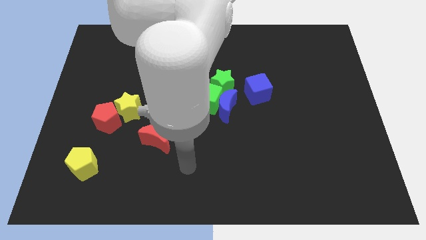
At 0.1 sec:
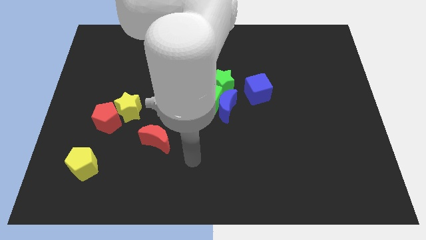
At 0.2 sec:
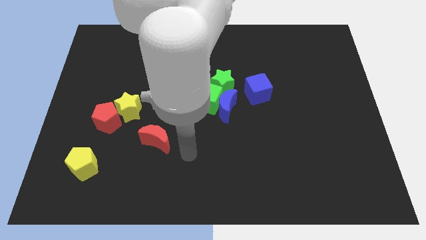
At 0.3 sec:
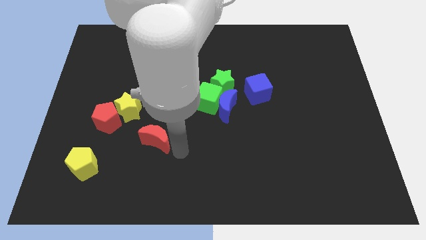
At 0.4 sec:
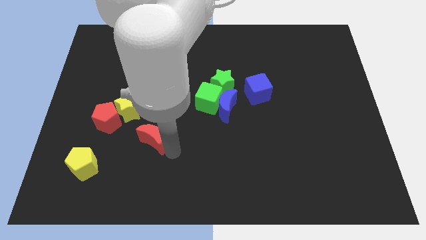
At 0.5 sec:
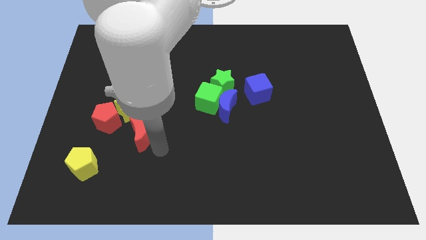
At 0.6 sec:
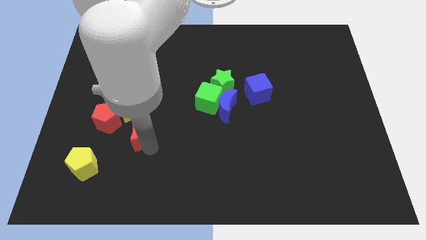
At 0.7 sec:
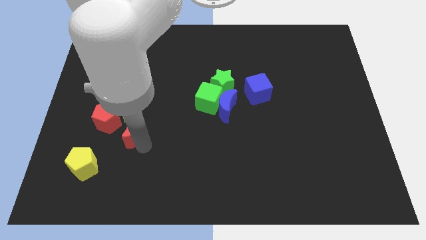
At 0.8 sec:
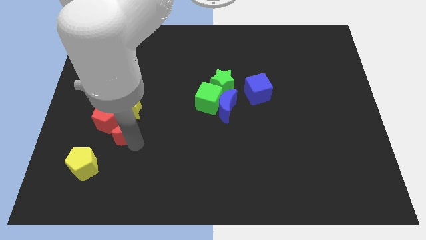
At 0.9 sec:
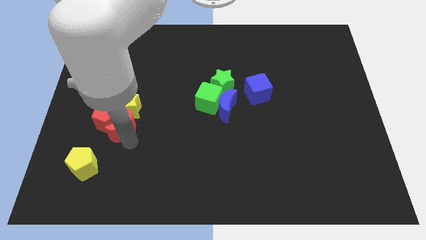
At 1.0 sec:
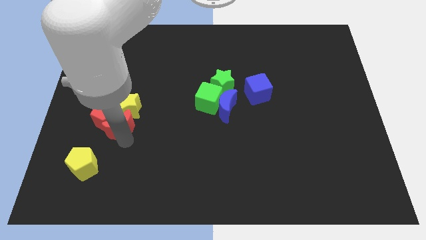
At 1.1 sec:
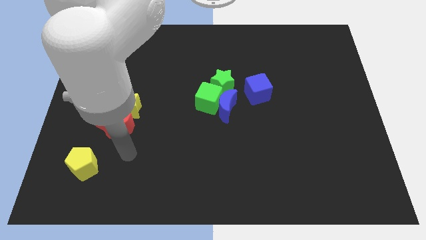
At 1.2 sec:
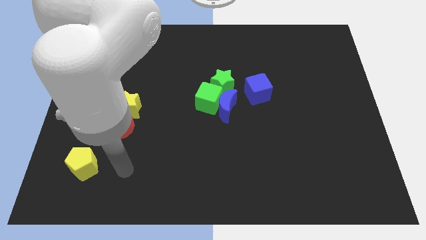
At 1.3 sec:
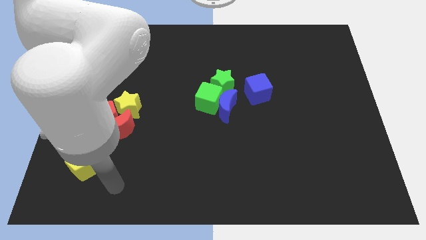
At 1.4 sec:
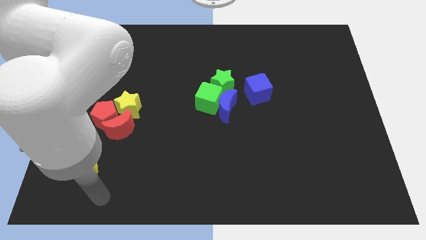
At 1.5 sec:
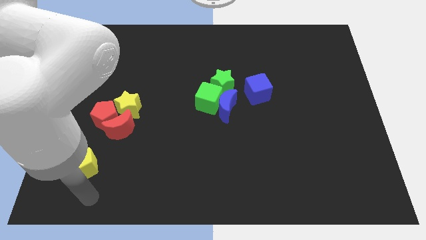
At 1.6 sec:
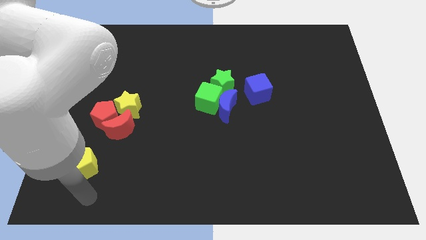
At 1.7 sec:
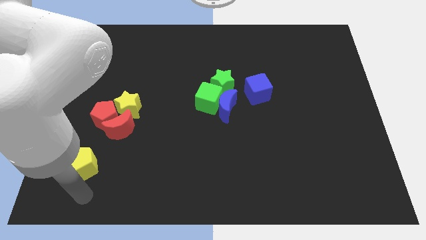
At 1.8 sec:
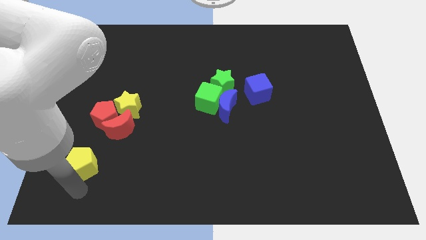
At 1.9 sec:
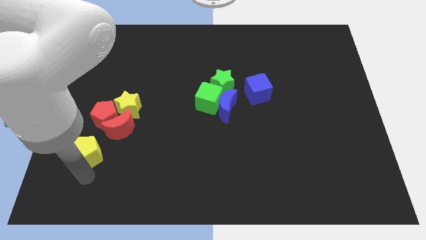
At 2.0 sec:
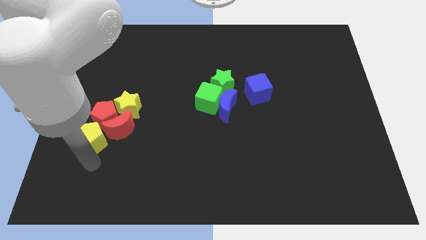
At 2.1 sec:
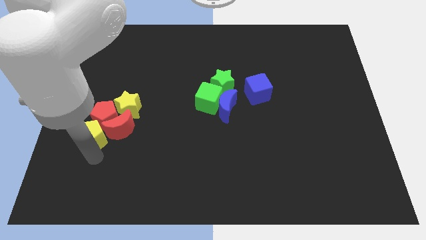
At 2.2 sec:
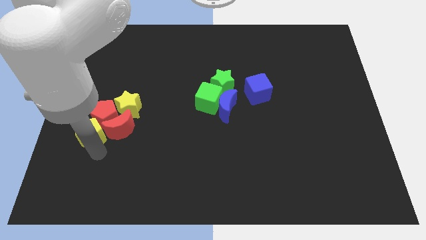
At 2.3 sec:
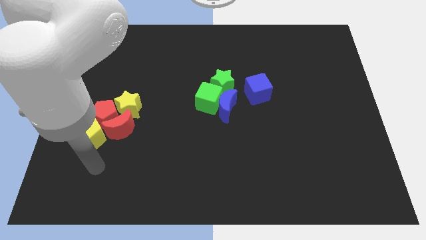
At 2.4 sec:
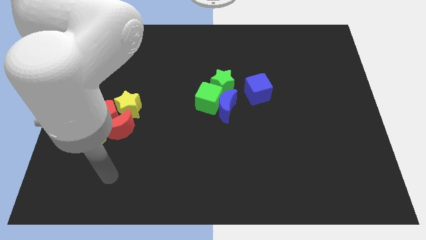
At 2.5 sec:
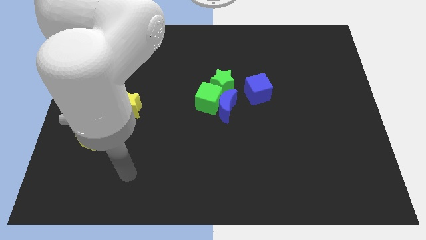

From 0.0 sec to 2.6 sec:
move the red moon and yellow pentagon into the group of blocks

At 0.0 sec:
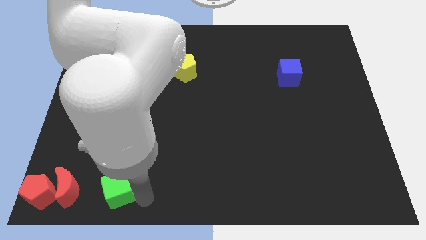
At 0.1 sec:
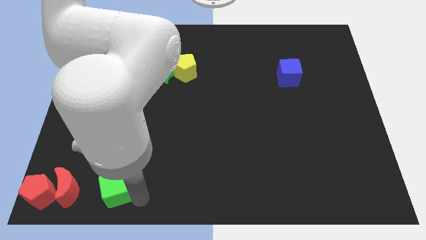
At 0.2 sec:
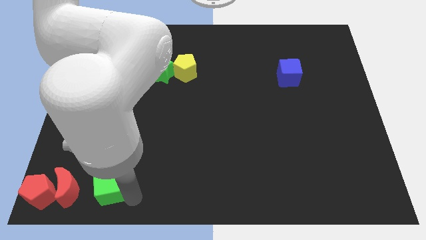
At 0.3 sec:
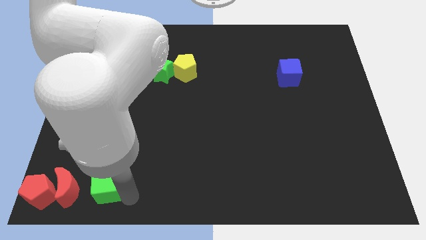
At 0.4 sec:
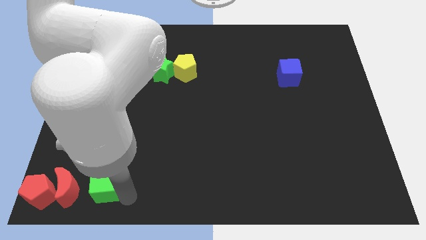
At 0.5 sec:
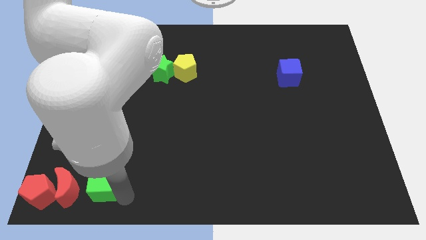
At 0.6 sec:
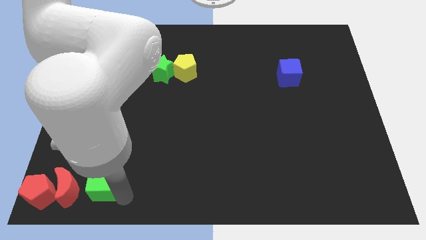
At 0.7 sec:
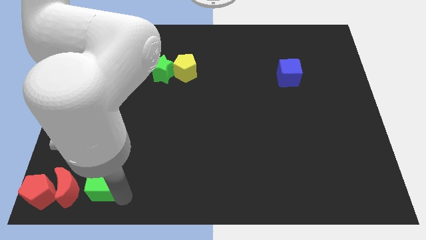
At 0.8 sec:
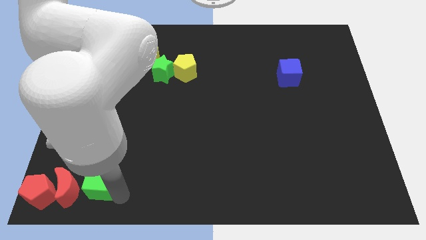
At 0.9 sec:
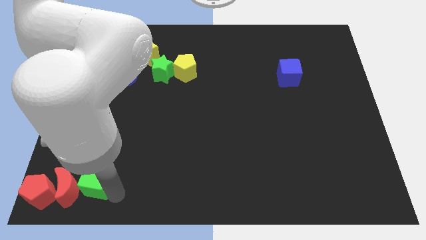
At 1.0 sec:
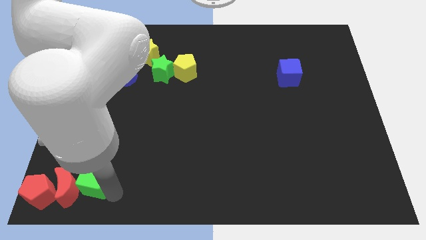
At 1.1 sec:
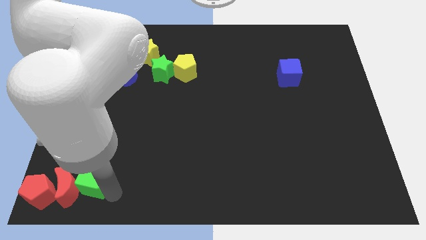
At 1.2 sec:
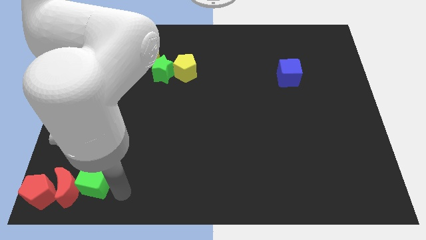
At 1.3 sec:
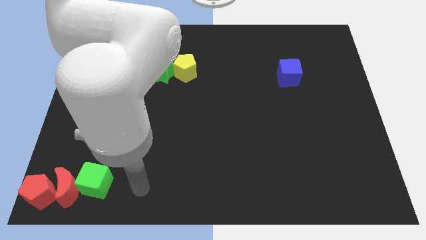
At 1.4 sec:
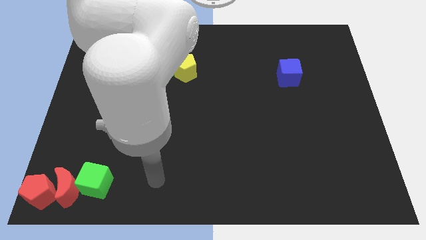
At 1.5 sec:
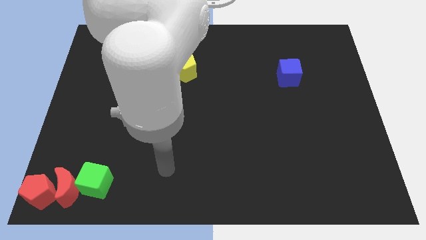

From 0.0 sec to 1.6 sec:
slide the green cube close to the right side of the red moon

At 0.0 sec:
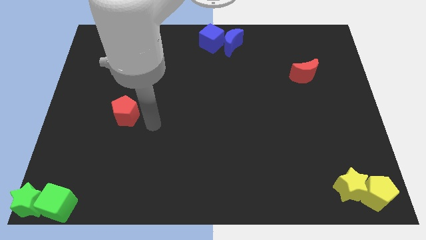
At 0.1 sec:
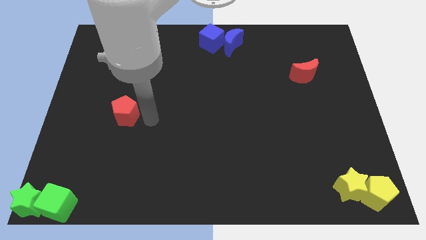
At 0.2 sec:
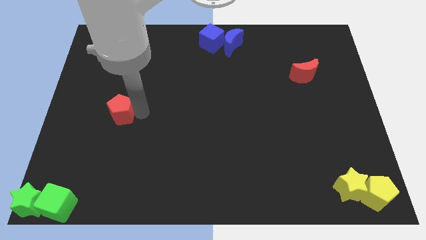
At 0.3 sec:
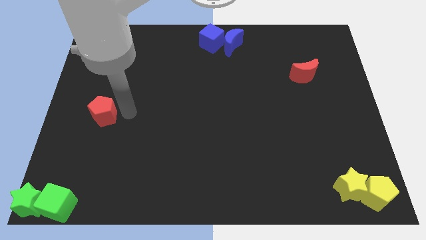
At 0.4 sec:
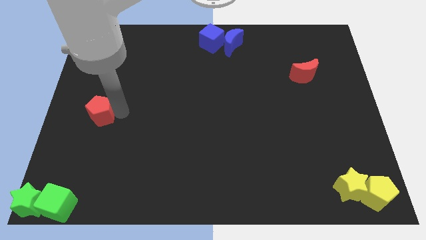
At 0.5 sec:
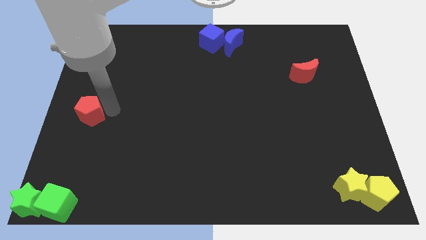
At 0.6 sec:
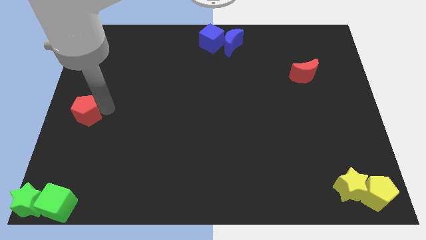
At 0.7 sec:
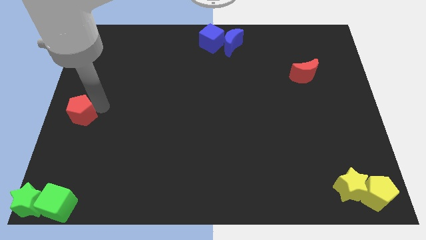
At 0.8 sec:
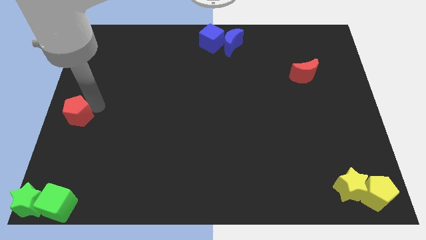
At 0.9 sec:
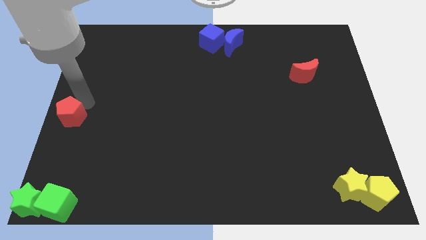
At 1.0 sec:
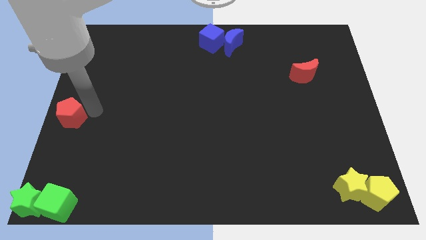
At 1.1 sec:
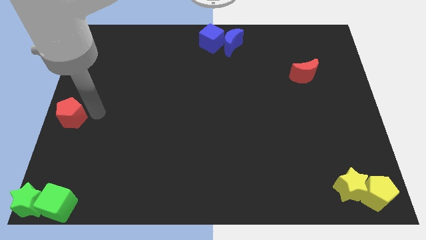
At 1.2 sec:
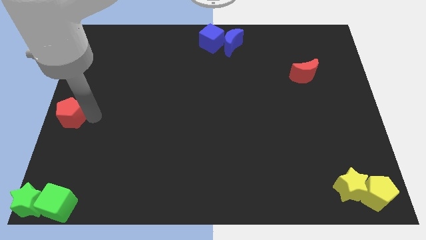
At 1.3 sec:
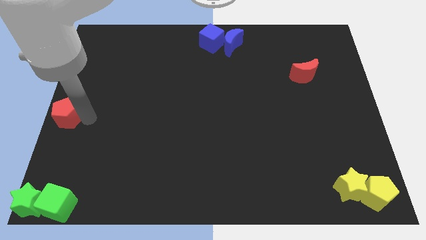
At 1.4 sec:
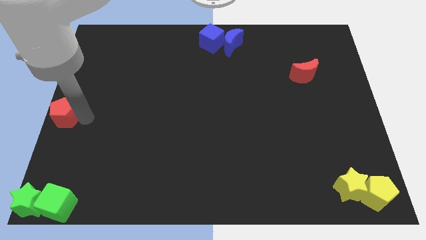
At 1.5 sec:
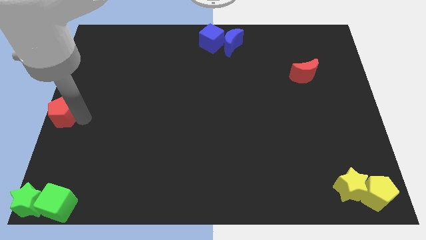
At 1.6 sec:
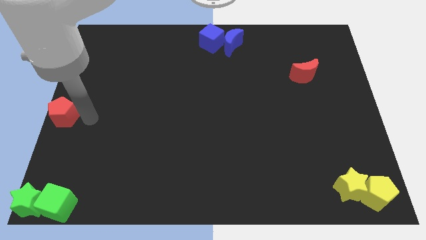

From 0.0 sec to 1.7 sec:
move the red pentagon vertically above the green star

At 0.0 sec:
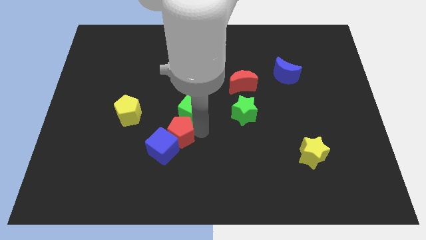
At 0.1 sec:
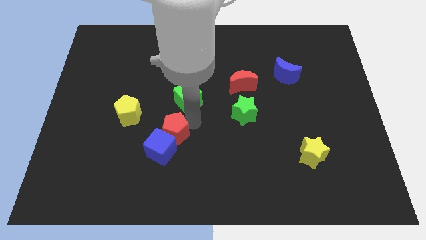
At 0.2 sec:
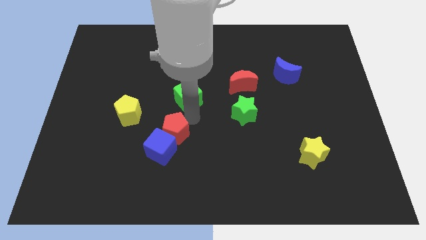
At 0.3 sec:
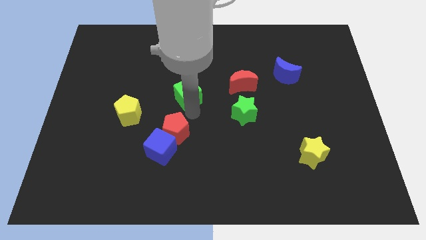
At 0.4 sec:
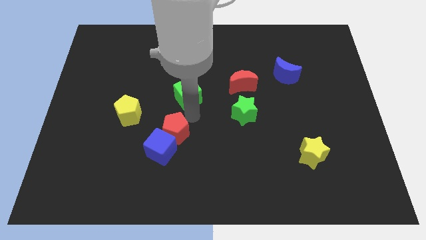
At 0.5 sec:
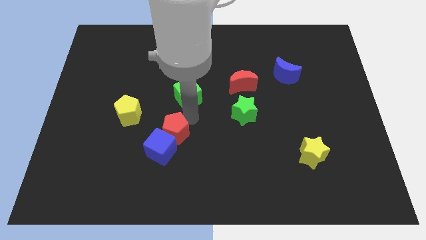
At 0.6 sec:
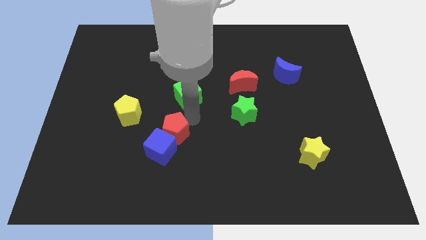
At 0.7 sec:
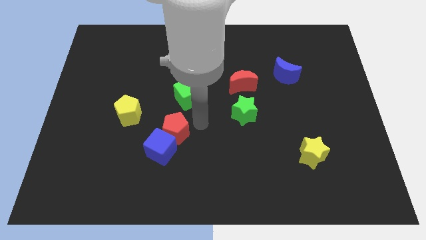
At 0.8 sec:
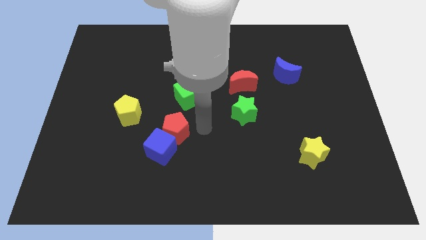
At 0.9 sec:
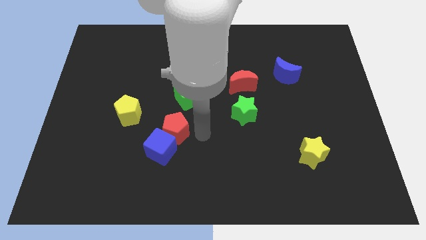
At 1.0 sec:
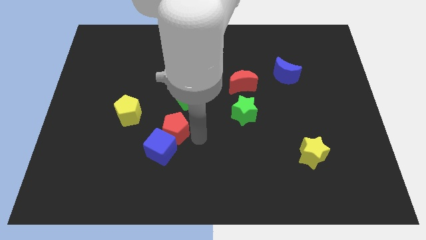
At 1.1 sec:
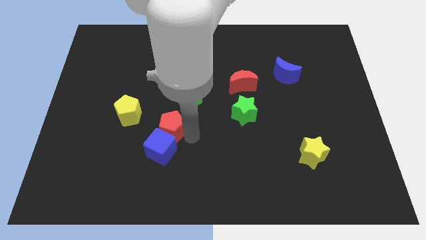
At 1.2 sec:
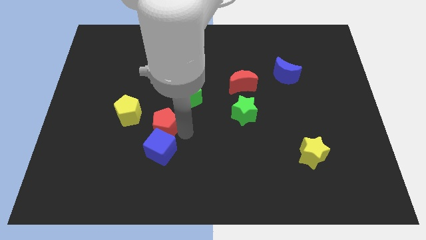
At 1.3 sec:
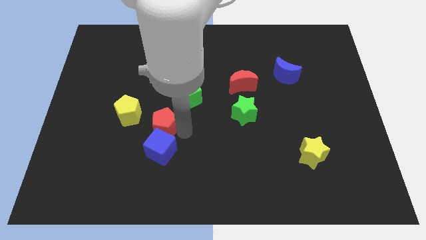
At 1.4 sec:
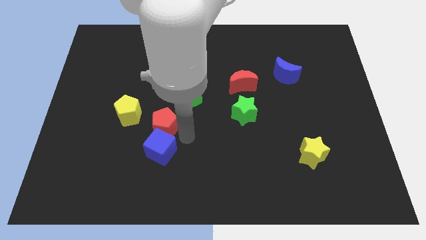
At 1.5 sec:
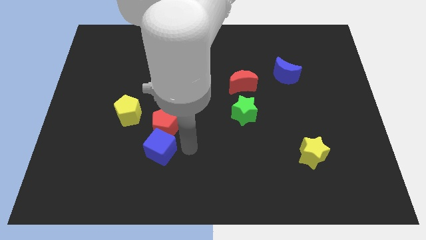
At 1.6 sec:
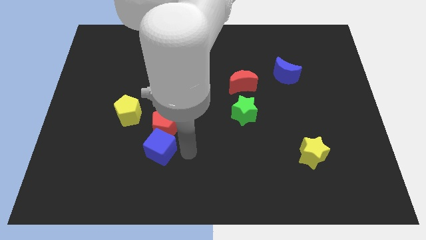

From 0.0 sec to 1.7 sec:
push the green cube and red pentagon towards the top left of the board

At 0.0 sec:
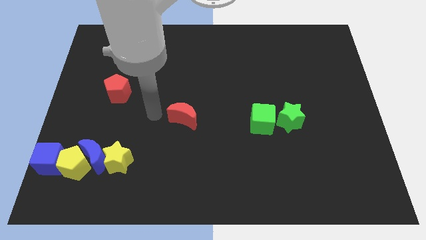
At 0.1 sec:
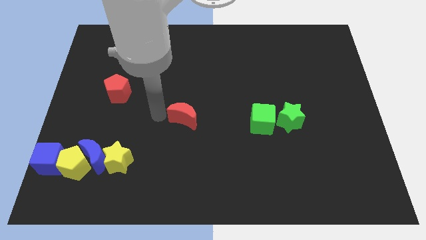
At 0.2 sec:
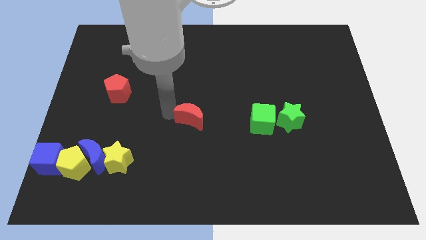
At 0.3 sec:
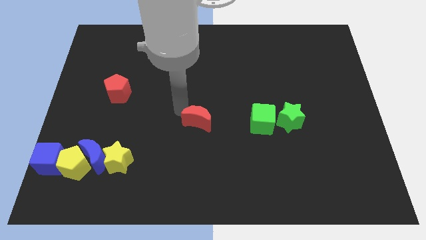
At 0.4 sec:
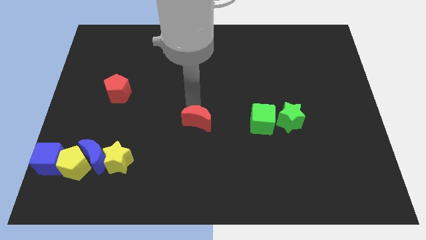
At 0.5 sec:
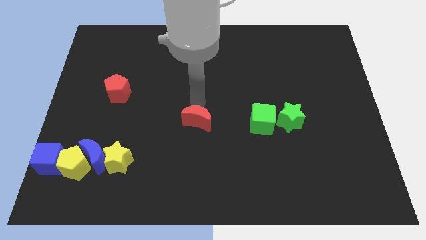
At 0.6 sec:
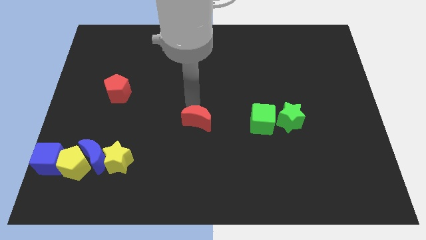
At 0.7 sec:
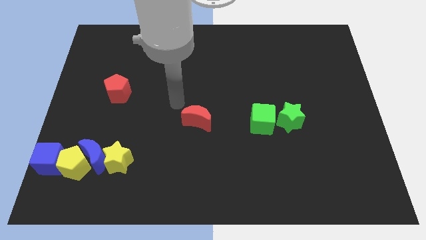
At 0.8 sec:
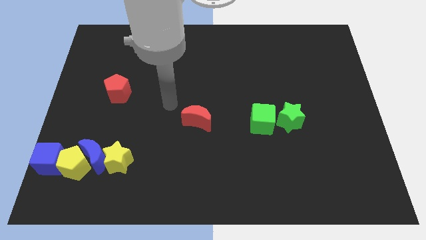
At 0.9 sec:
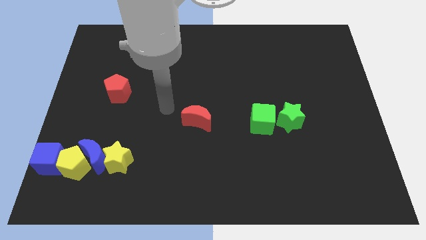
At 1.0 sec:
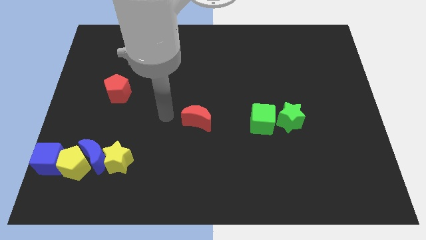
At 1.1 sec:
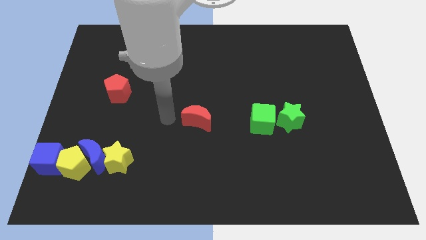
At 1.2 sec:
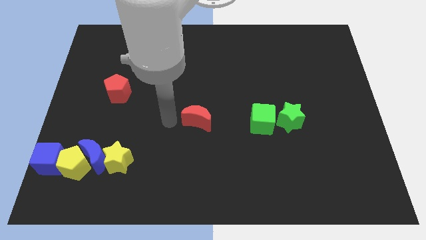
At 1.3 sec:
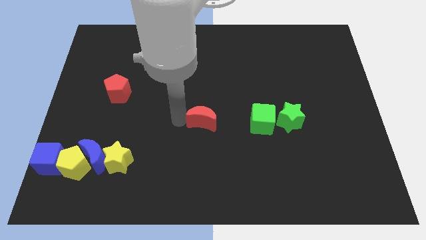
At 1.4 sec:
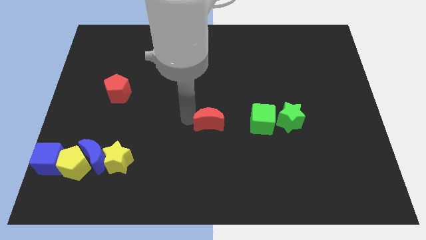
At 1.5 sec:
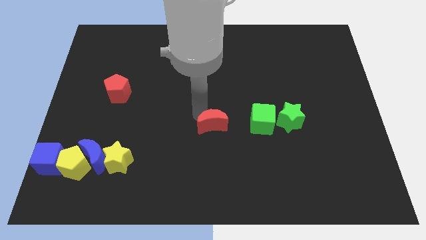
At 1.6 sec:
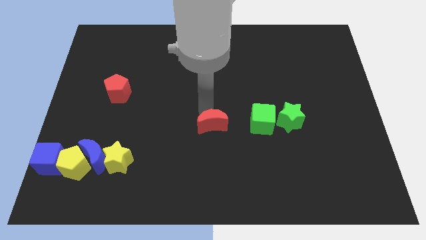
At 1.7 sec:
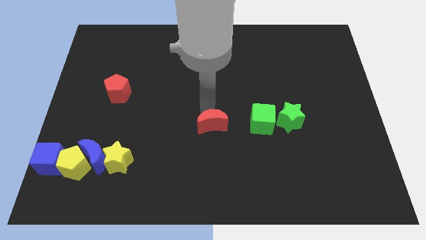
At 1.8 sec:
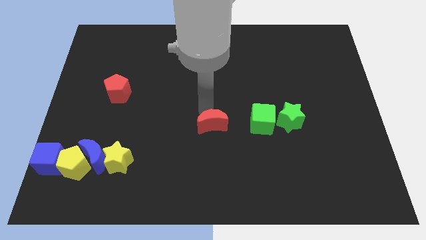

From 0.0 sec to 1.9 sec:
drag the red crescent parallel left to the green cube
